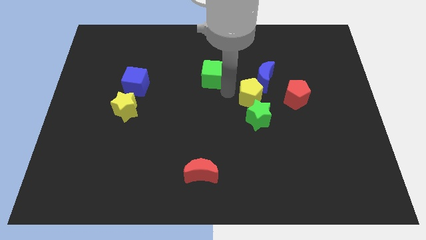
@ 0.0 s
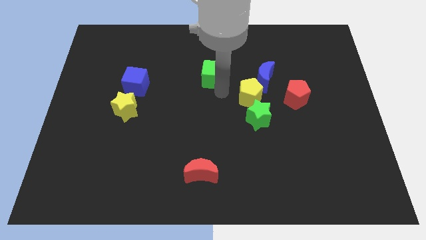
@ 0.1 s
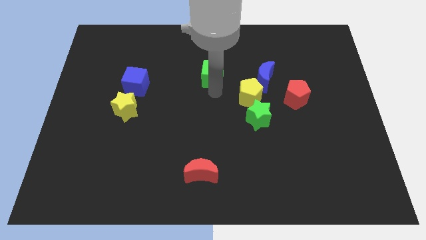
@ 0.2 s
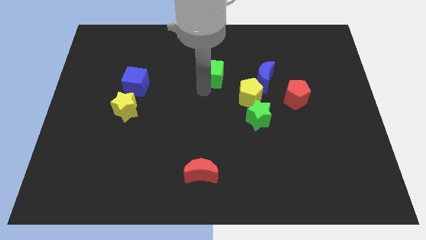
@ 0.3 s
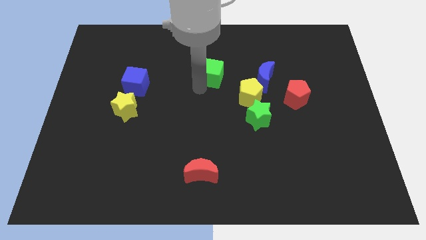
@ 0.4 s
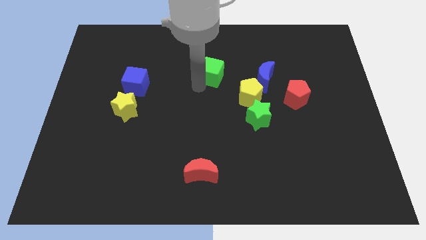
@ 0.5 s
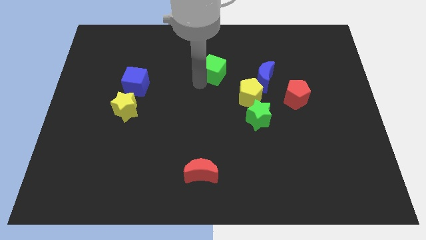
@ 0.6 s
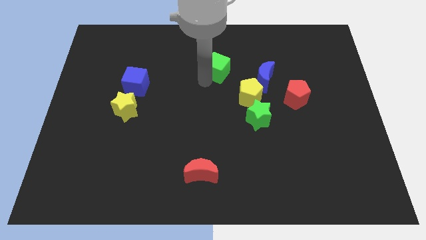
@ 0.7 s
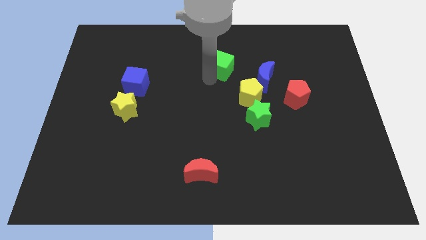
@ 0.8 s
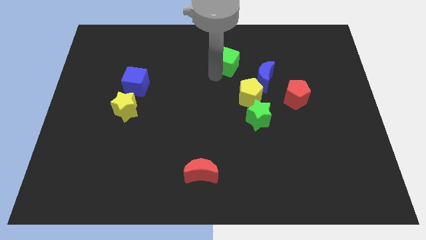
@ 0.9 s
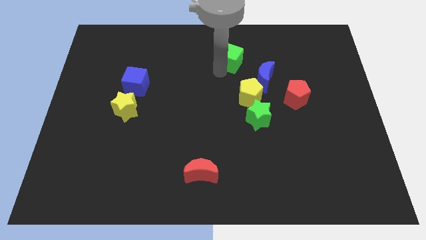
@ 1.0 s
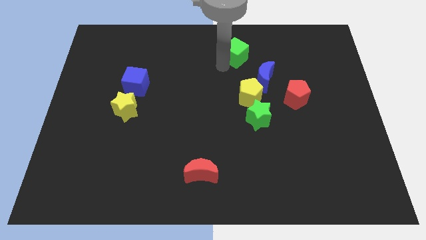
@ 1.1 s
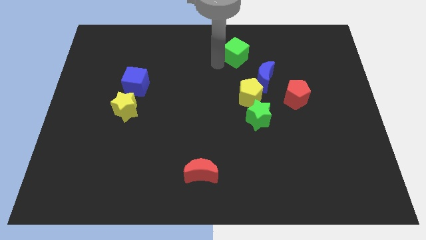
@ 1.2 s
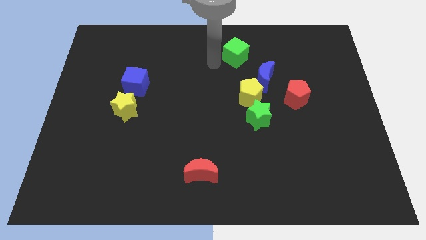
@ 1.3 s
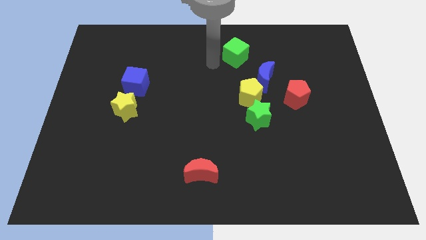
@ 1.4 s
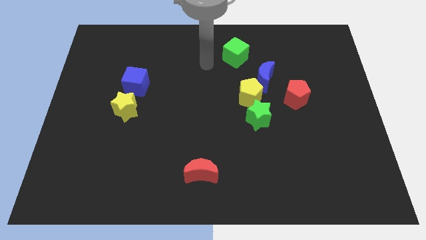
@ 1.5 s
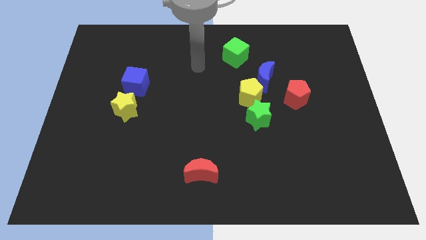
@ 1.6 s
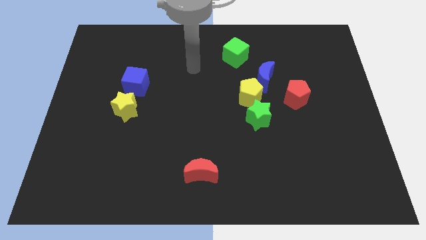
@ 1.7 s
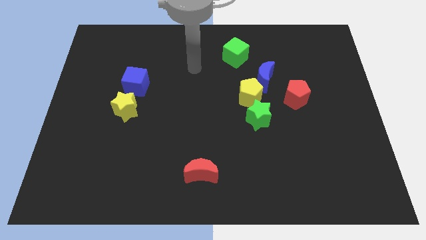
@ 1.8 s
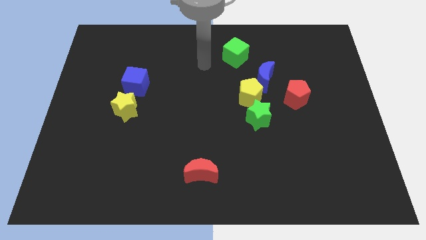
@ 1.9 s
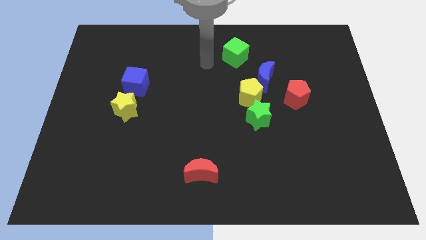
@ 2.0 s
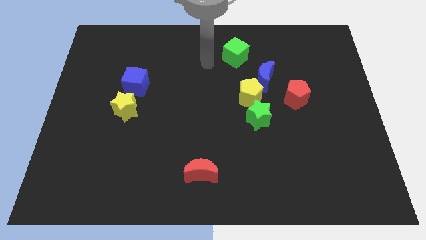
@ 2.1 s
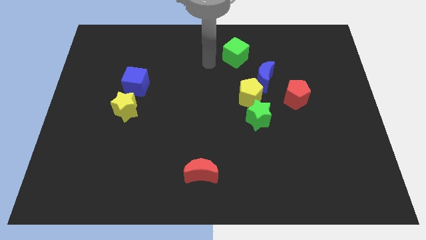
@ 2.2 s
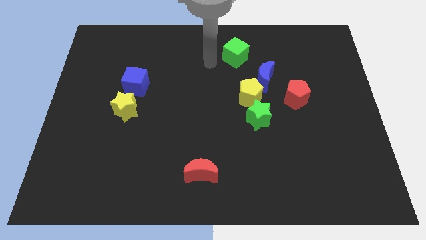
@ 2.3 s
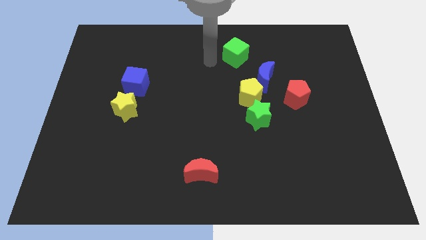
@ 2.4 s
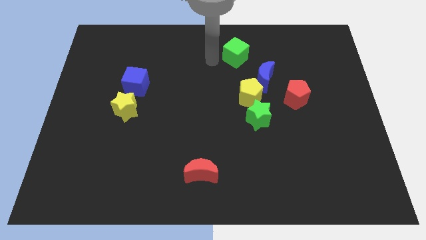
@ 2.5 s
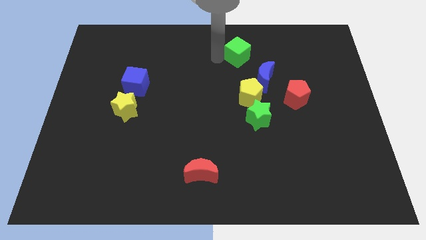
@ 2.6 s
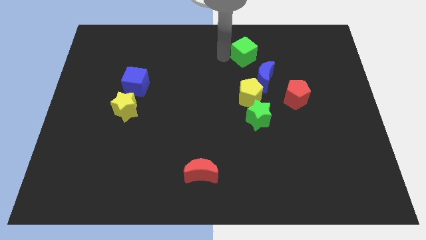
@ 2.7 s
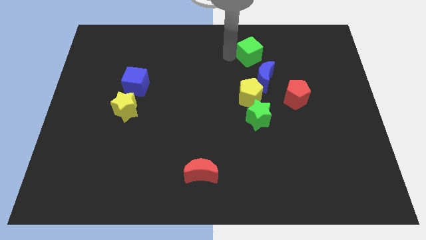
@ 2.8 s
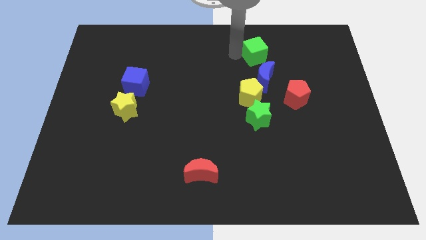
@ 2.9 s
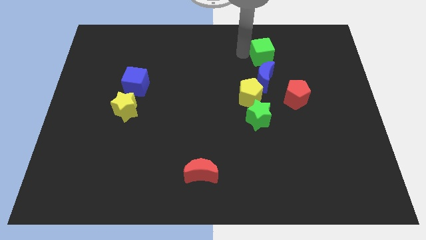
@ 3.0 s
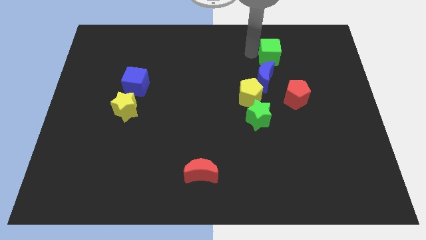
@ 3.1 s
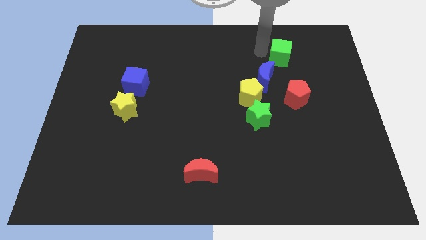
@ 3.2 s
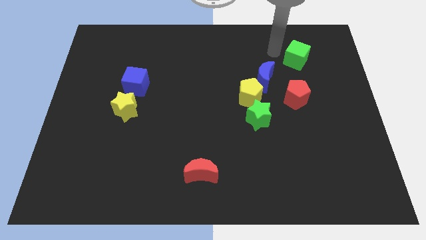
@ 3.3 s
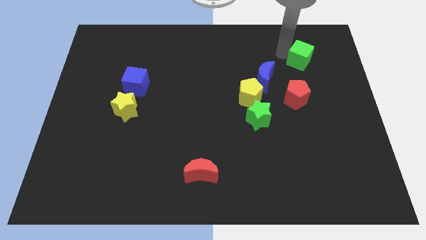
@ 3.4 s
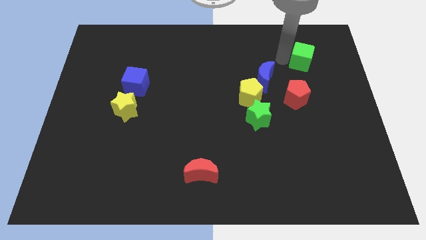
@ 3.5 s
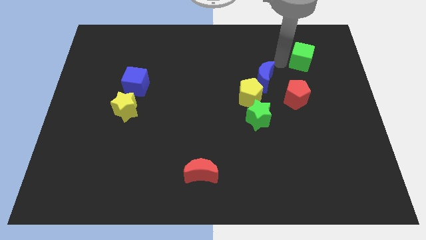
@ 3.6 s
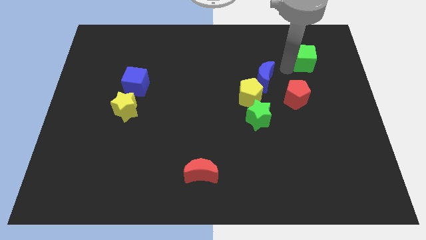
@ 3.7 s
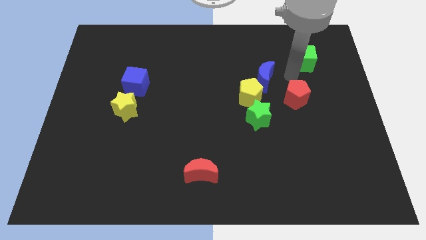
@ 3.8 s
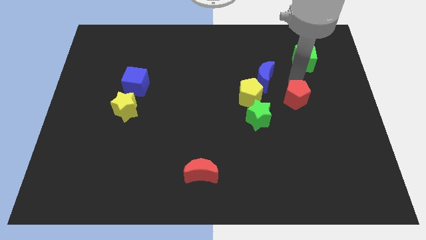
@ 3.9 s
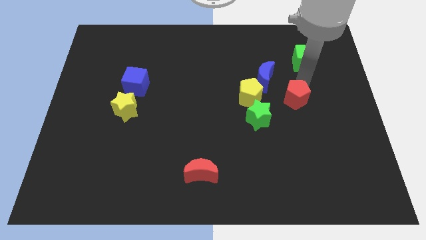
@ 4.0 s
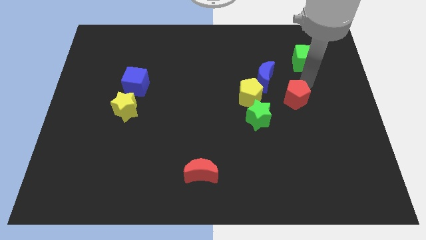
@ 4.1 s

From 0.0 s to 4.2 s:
slide green cube above the red pentagon

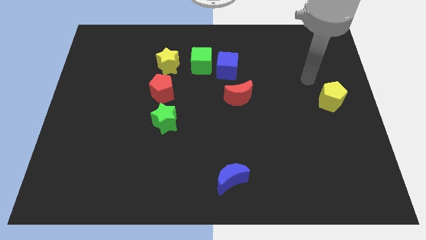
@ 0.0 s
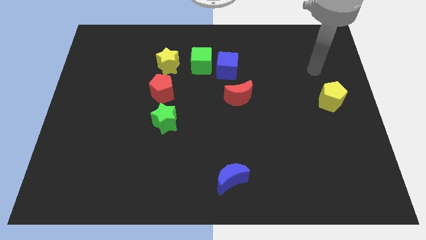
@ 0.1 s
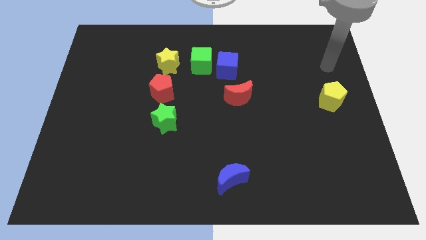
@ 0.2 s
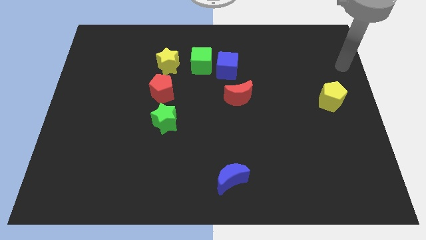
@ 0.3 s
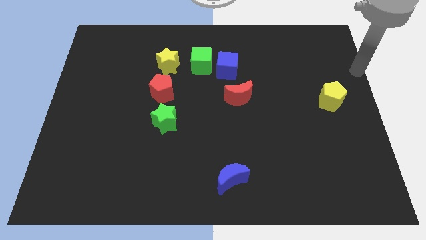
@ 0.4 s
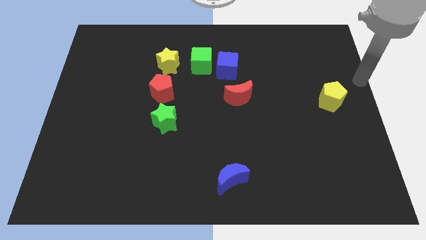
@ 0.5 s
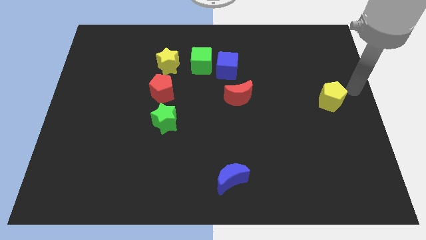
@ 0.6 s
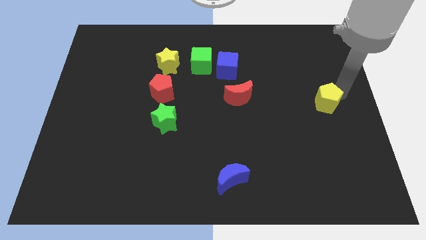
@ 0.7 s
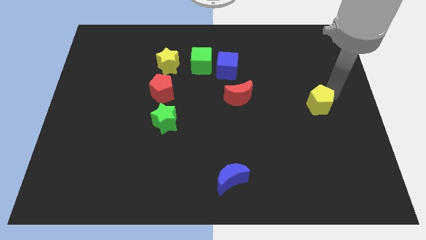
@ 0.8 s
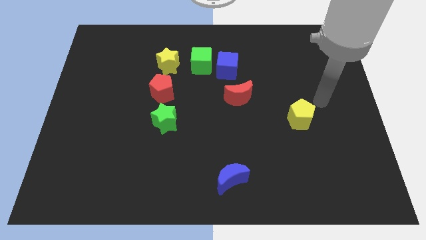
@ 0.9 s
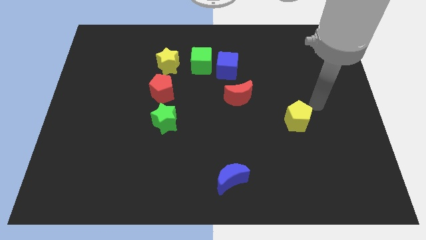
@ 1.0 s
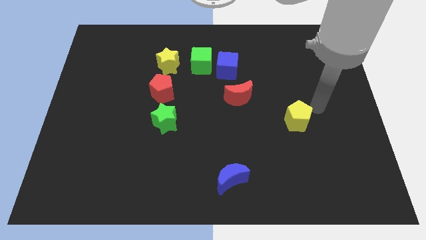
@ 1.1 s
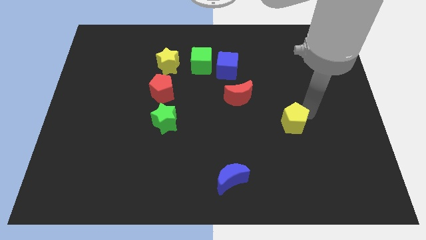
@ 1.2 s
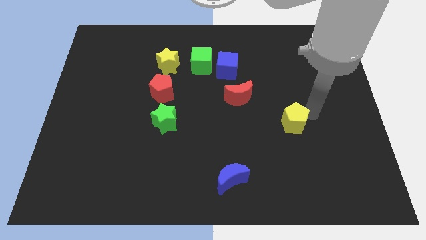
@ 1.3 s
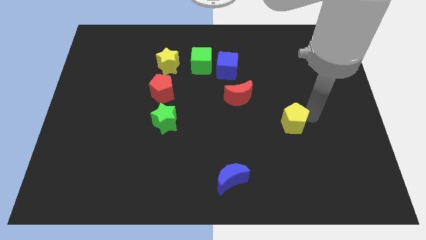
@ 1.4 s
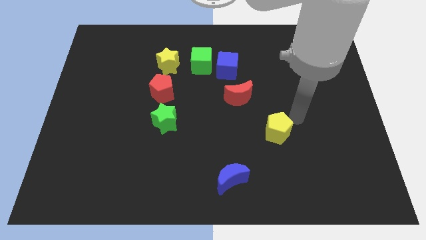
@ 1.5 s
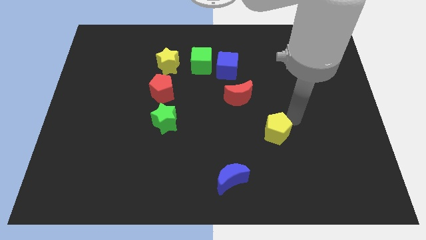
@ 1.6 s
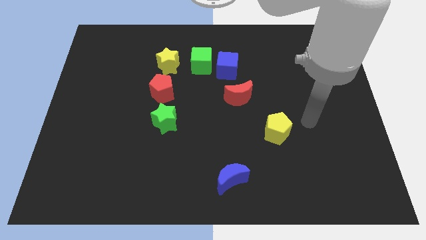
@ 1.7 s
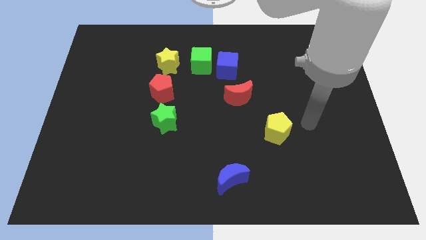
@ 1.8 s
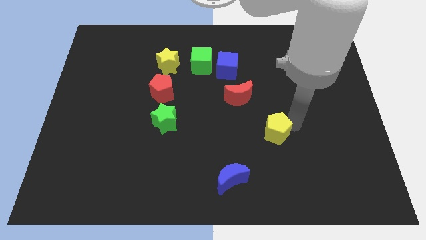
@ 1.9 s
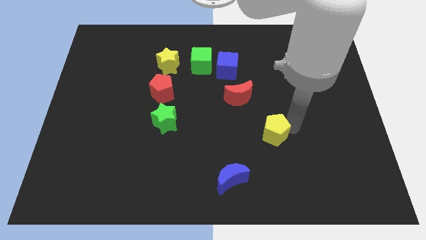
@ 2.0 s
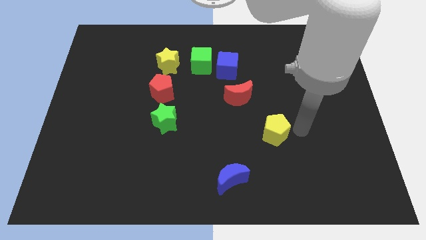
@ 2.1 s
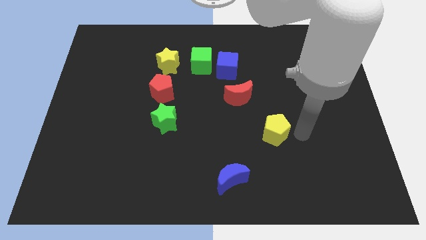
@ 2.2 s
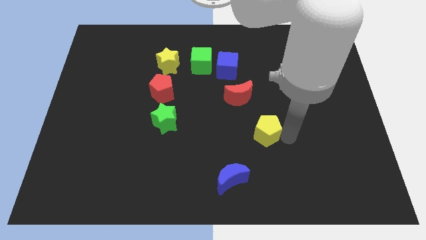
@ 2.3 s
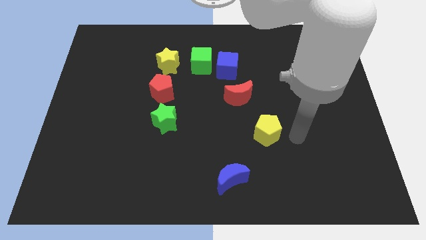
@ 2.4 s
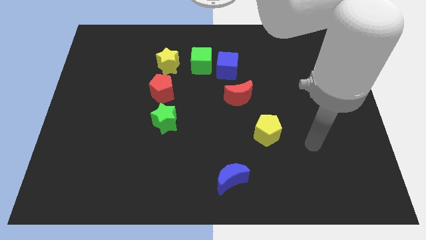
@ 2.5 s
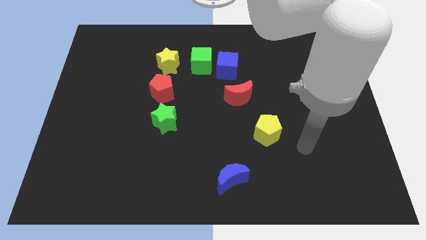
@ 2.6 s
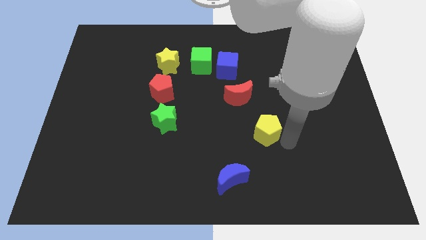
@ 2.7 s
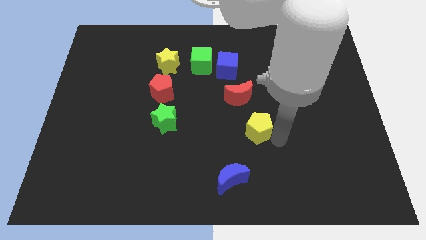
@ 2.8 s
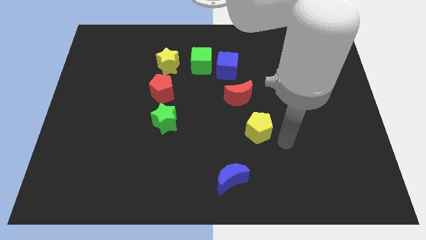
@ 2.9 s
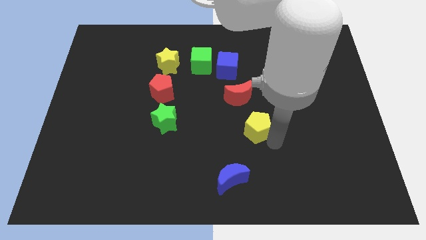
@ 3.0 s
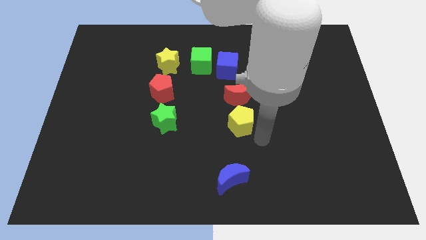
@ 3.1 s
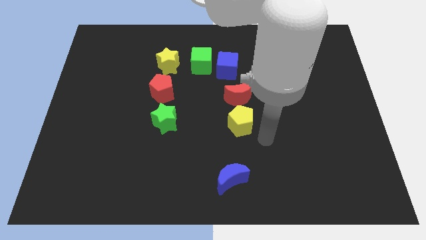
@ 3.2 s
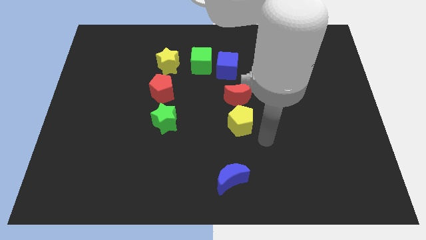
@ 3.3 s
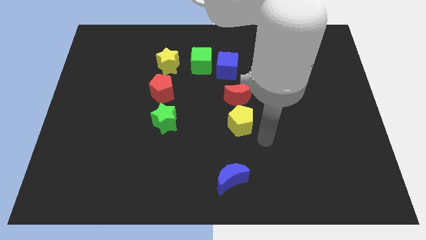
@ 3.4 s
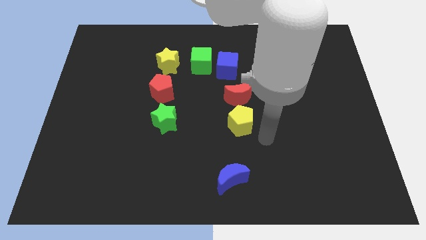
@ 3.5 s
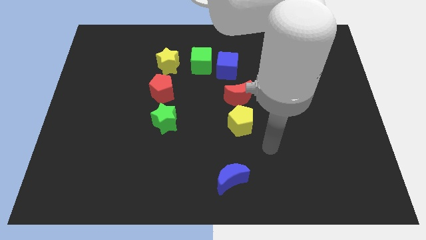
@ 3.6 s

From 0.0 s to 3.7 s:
move the yellow pentagon below the red crescent

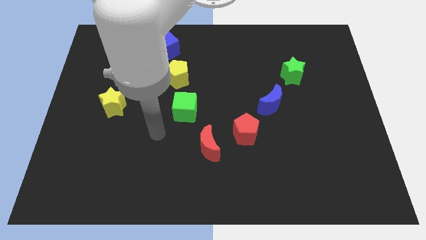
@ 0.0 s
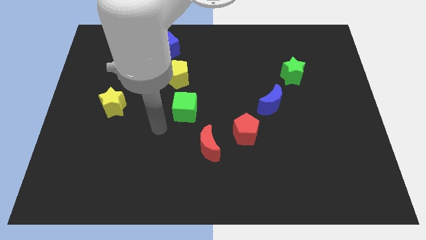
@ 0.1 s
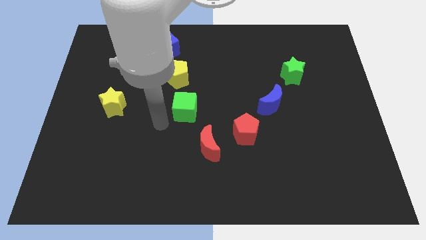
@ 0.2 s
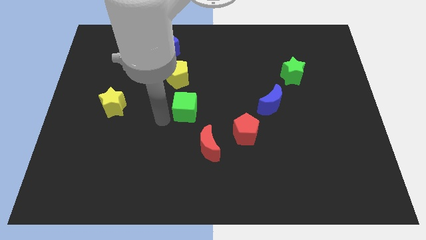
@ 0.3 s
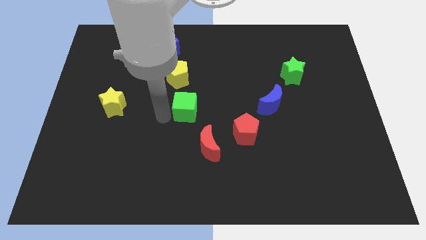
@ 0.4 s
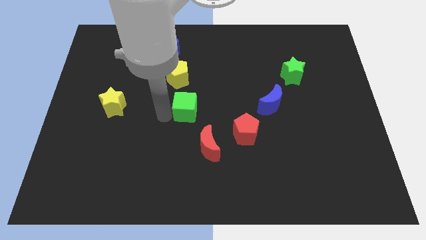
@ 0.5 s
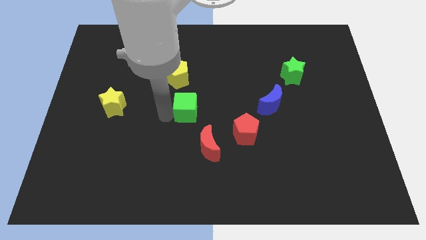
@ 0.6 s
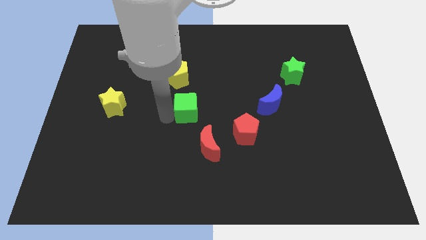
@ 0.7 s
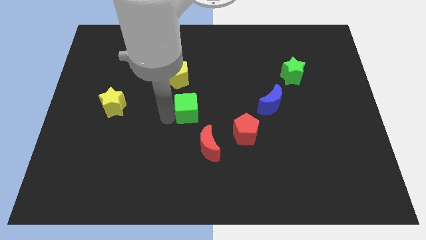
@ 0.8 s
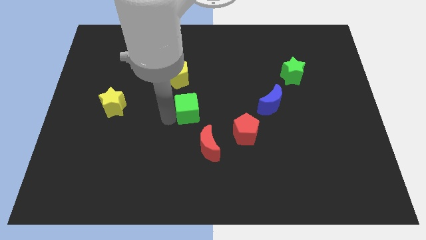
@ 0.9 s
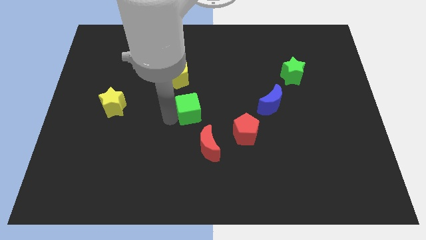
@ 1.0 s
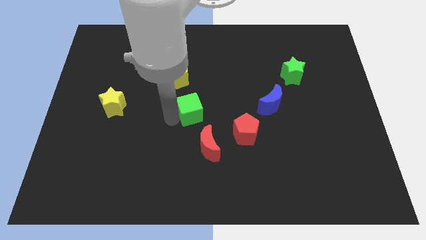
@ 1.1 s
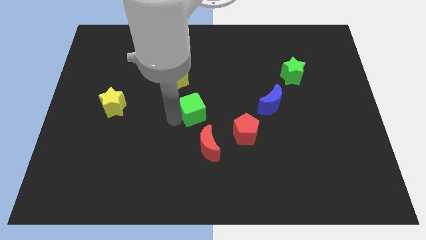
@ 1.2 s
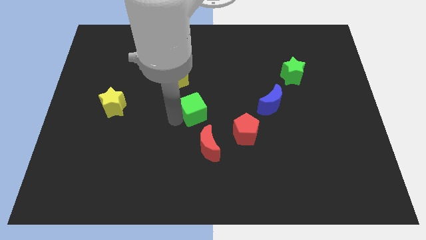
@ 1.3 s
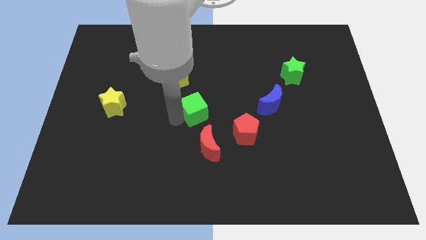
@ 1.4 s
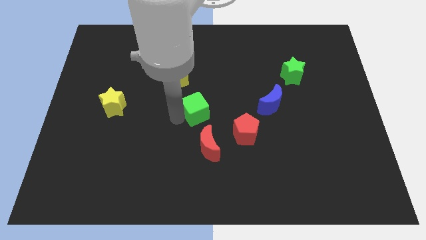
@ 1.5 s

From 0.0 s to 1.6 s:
align green cube in the diagonal row properly
